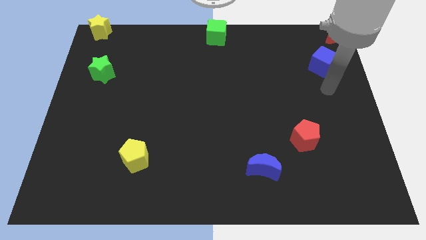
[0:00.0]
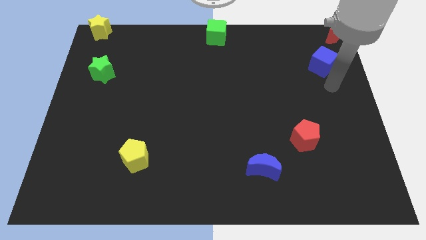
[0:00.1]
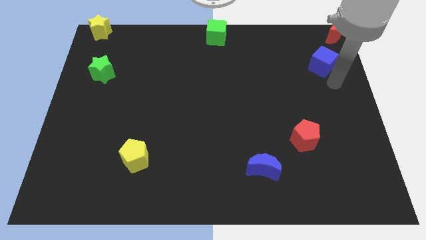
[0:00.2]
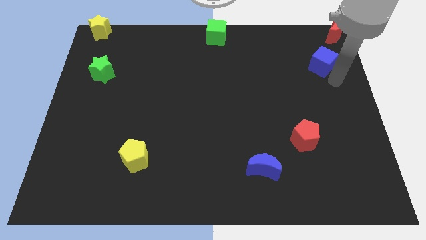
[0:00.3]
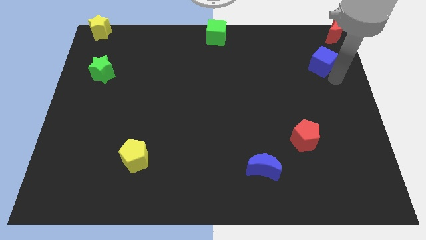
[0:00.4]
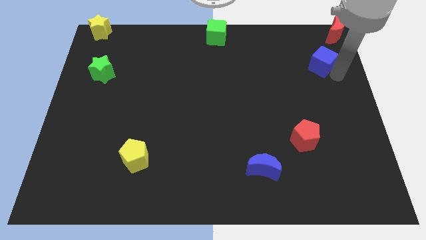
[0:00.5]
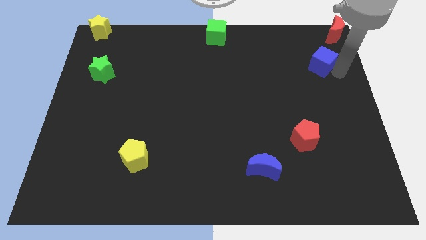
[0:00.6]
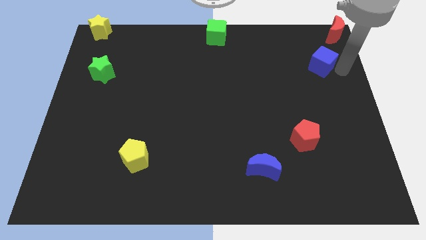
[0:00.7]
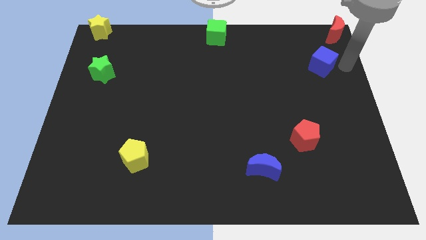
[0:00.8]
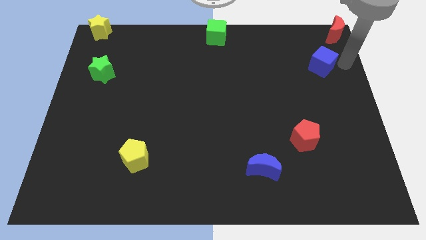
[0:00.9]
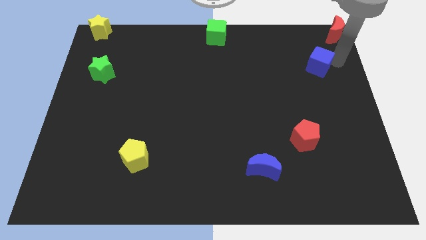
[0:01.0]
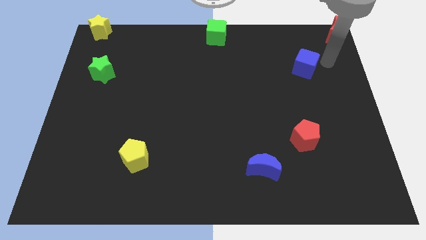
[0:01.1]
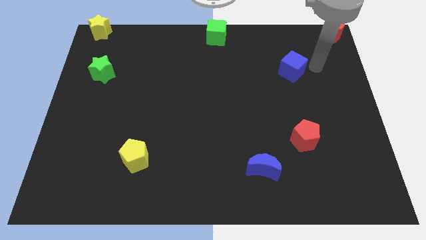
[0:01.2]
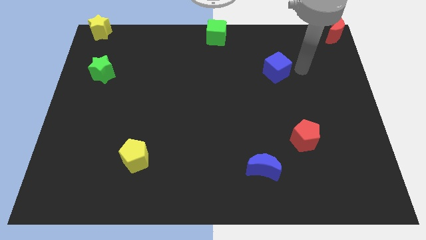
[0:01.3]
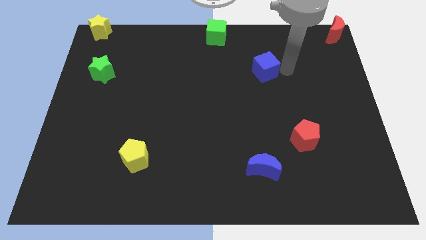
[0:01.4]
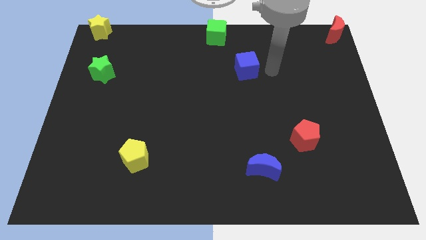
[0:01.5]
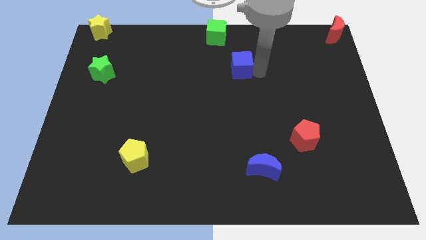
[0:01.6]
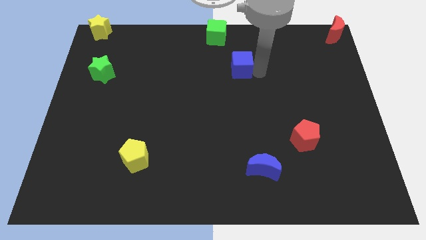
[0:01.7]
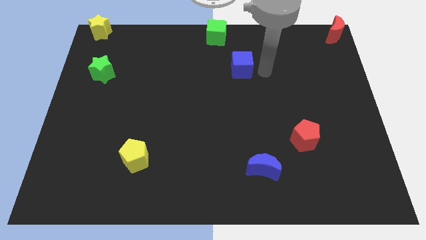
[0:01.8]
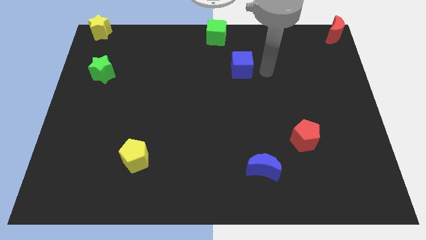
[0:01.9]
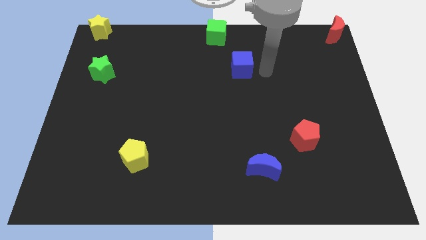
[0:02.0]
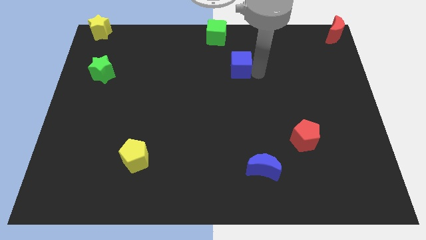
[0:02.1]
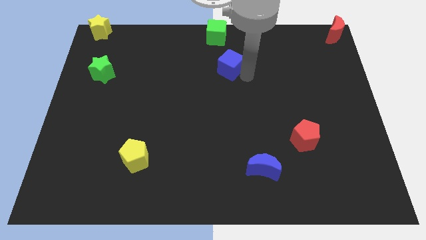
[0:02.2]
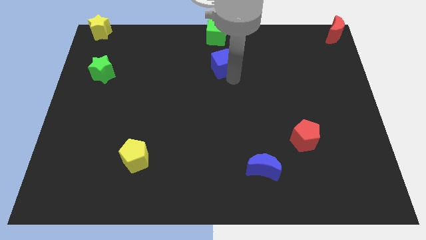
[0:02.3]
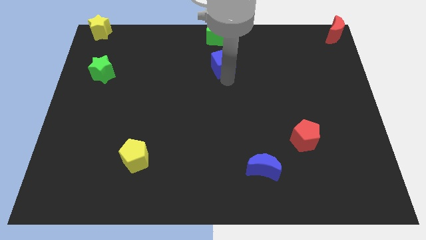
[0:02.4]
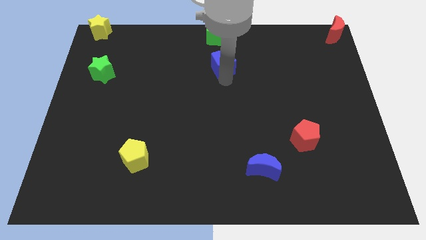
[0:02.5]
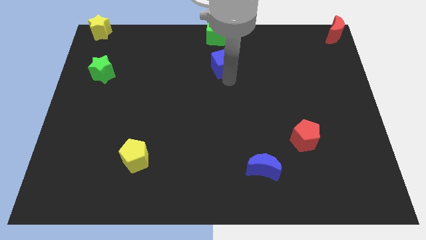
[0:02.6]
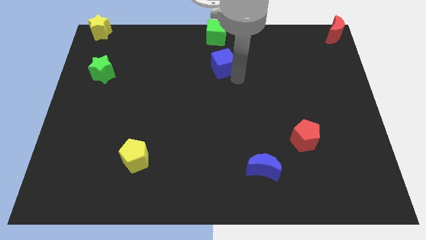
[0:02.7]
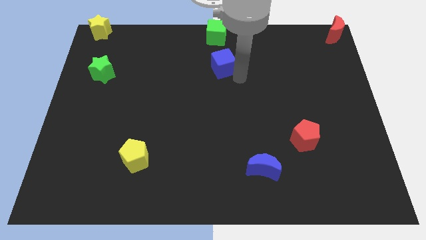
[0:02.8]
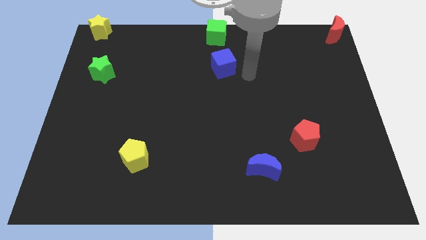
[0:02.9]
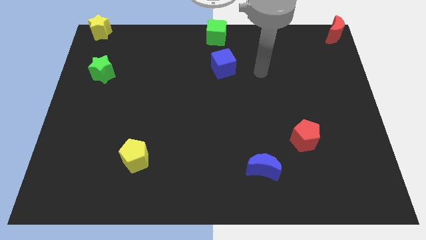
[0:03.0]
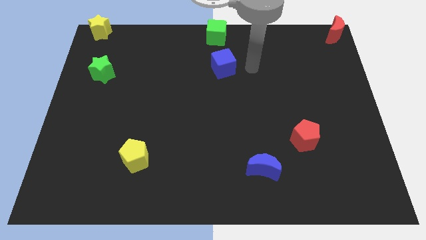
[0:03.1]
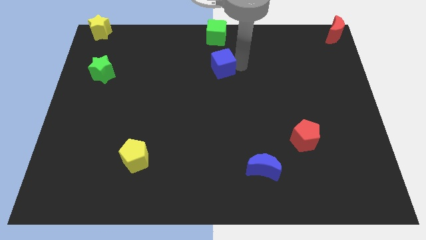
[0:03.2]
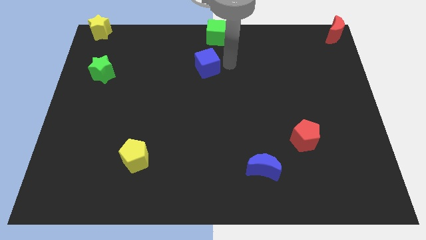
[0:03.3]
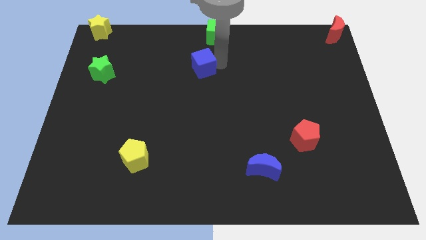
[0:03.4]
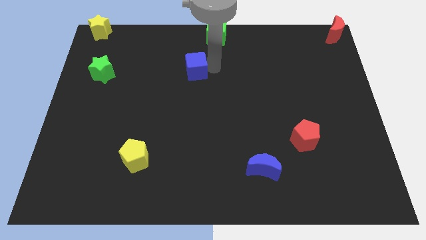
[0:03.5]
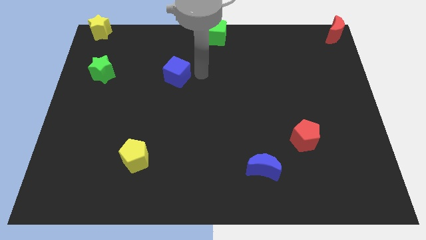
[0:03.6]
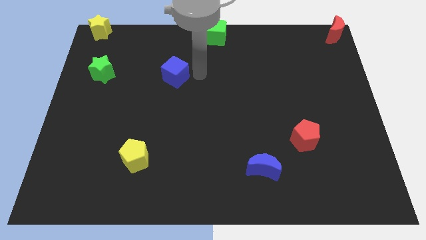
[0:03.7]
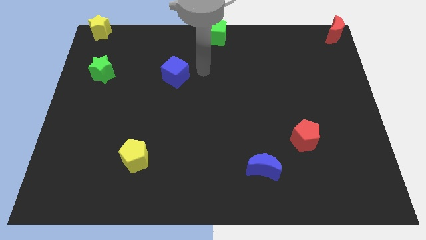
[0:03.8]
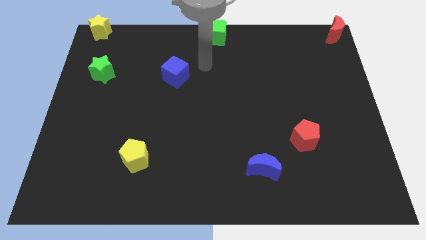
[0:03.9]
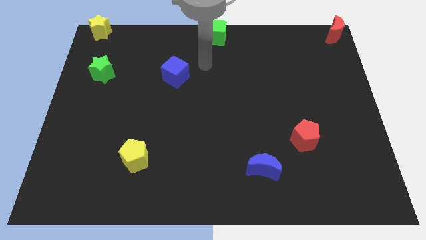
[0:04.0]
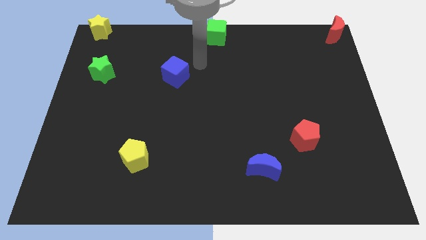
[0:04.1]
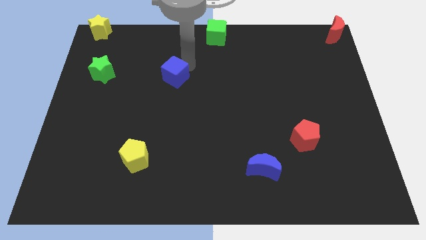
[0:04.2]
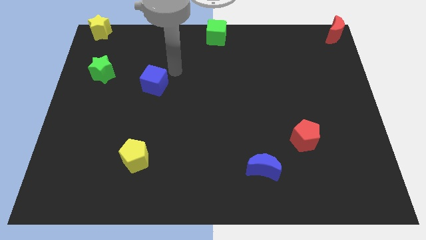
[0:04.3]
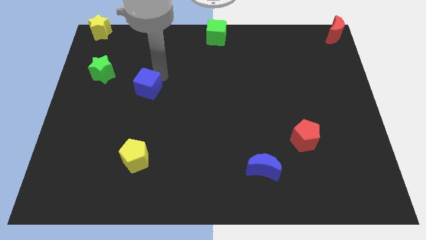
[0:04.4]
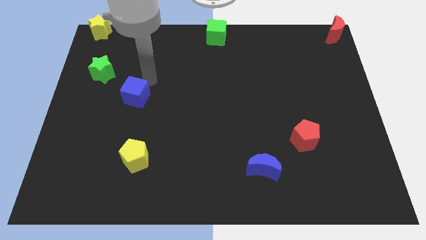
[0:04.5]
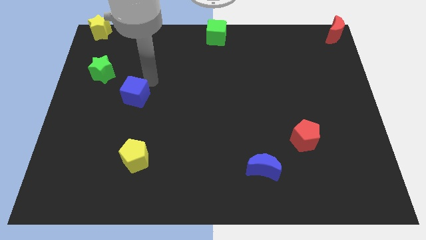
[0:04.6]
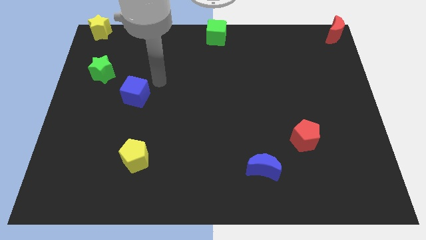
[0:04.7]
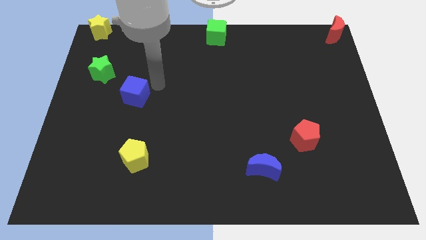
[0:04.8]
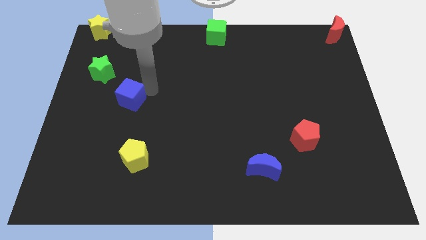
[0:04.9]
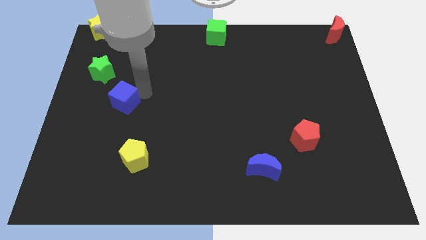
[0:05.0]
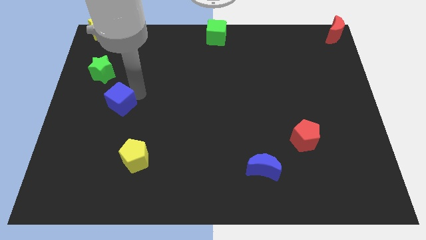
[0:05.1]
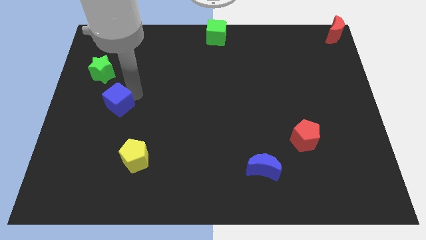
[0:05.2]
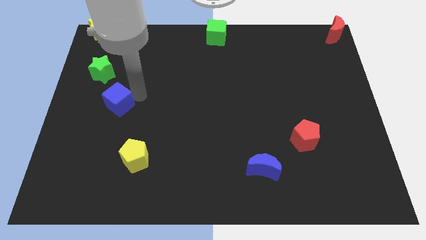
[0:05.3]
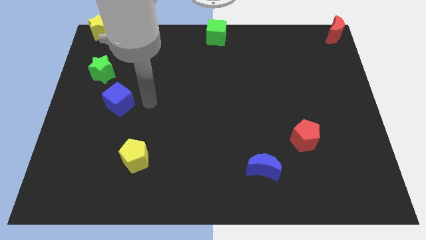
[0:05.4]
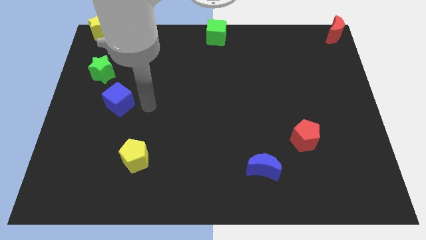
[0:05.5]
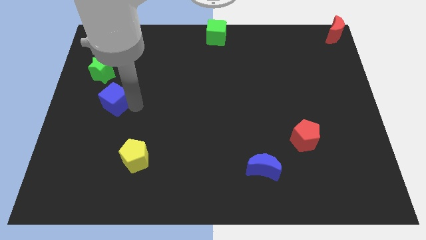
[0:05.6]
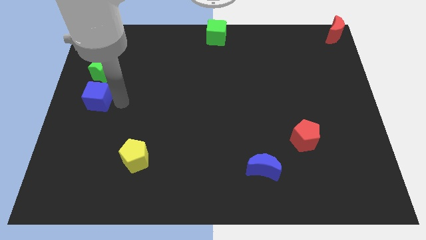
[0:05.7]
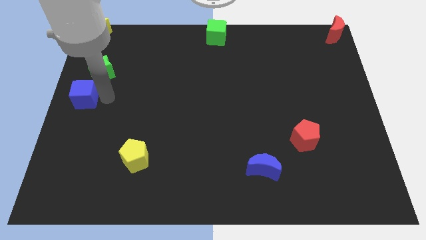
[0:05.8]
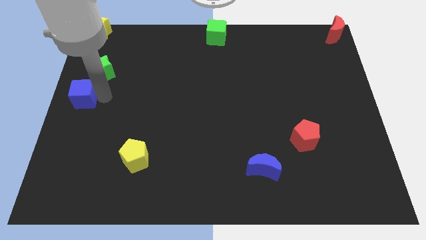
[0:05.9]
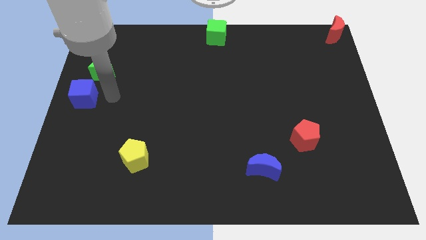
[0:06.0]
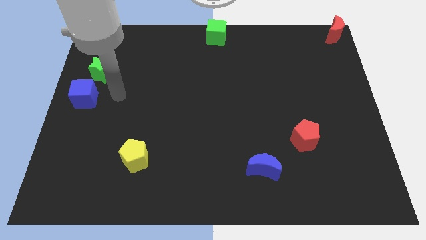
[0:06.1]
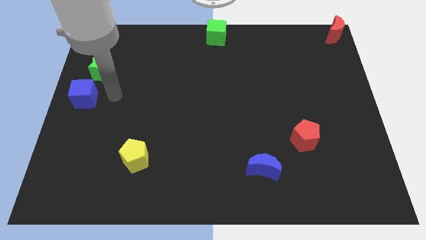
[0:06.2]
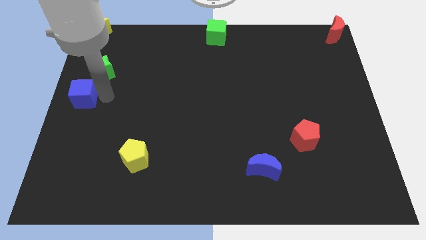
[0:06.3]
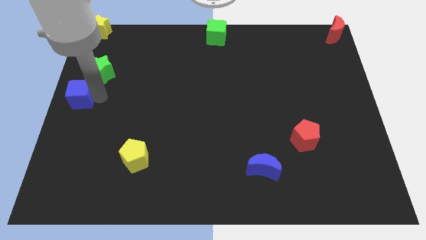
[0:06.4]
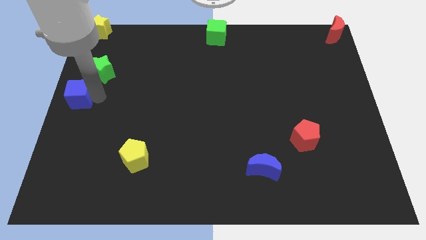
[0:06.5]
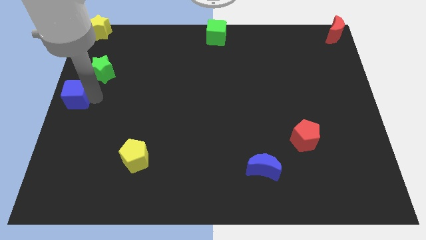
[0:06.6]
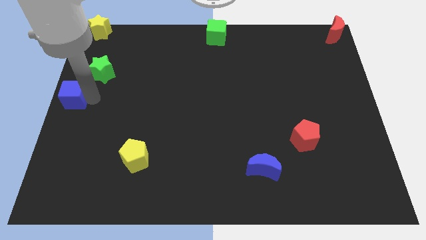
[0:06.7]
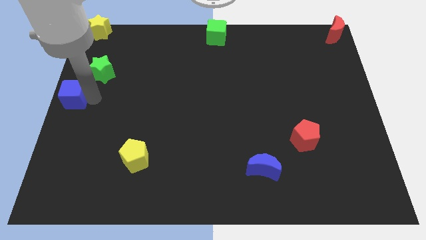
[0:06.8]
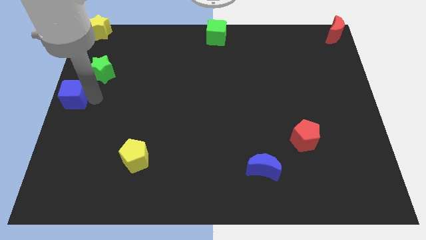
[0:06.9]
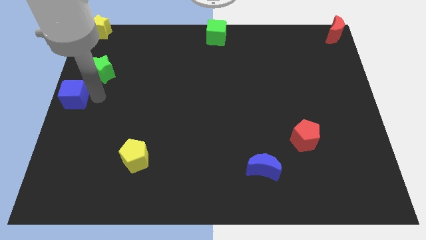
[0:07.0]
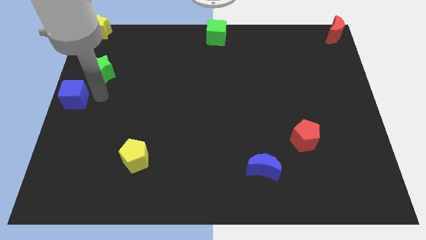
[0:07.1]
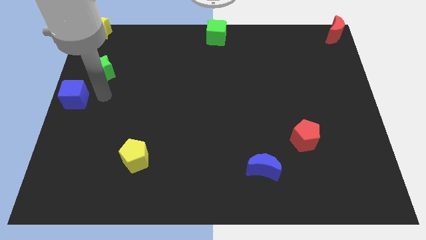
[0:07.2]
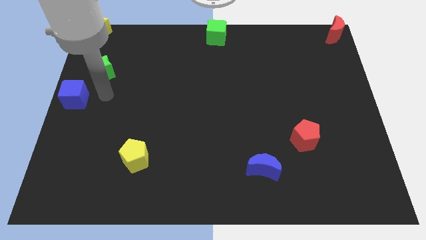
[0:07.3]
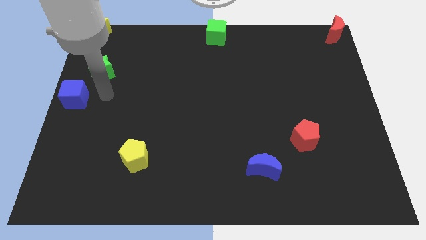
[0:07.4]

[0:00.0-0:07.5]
push the blue cube towards the left center of the board

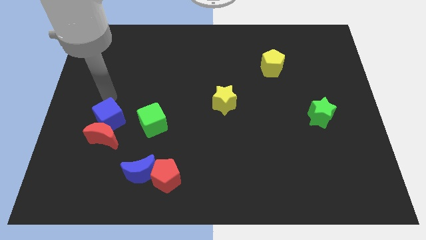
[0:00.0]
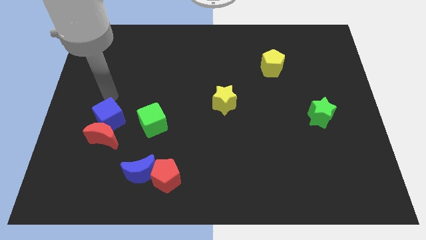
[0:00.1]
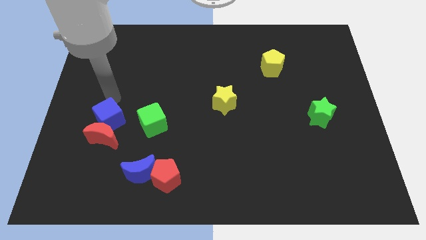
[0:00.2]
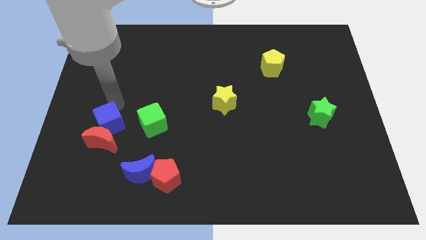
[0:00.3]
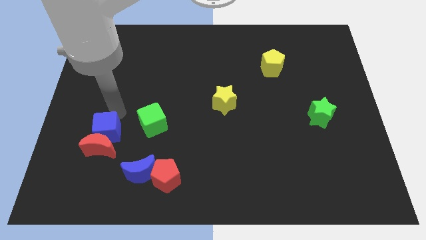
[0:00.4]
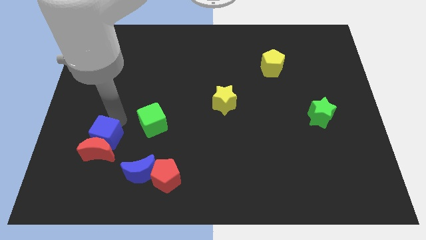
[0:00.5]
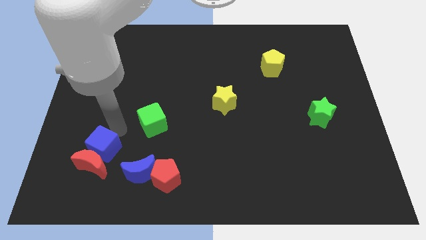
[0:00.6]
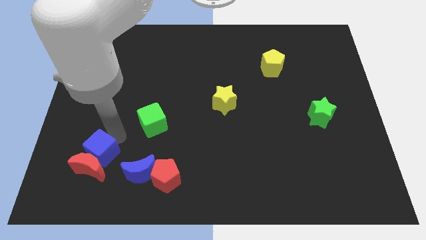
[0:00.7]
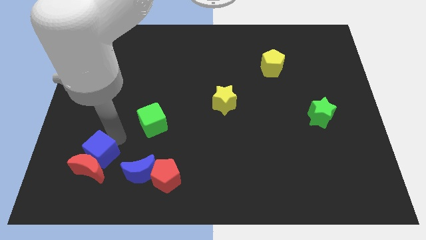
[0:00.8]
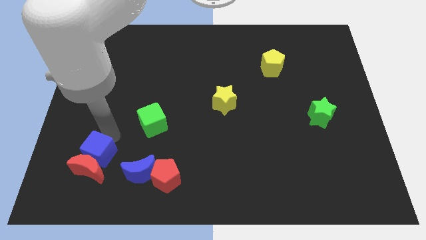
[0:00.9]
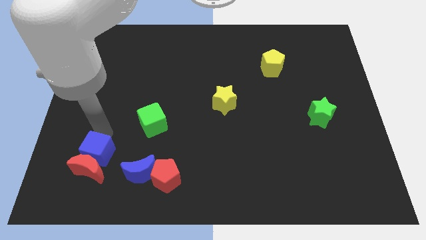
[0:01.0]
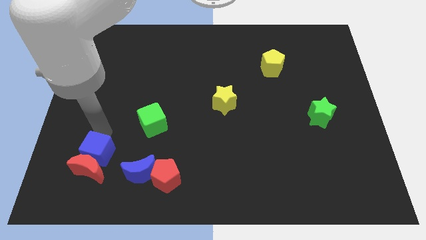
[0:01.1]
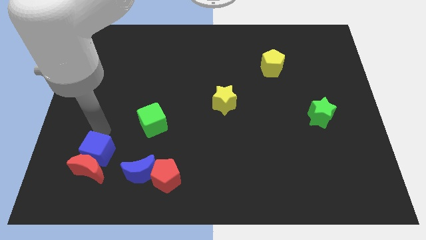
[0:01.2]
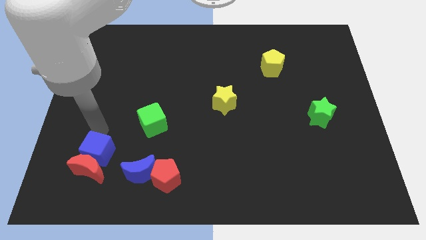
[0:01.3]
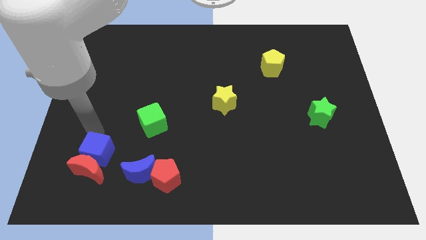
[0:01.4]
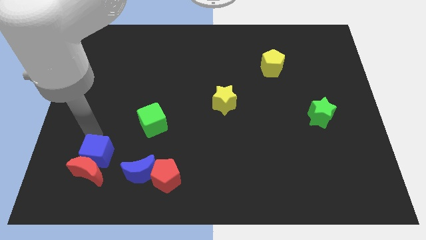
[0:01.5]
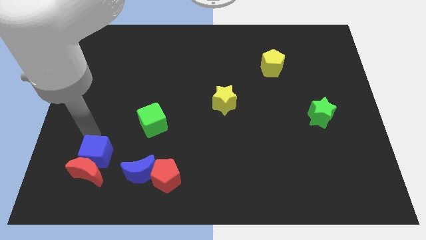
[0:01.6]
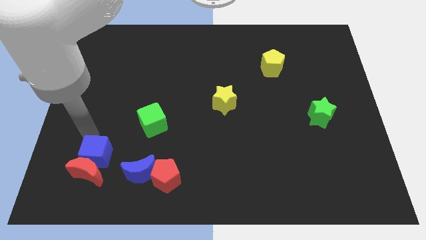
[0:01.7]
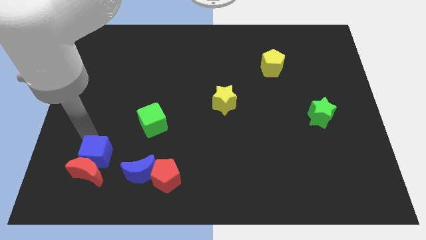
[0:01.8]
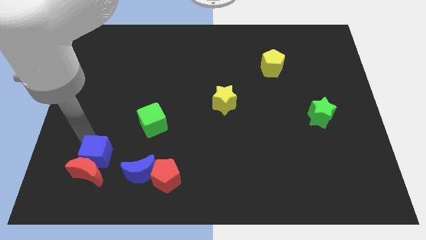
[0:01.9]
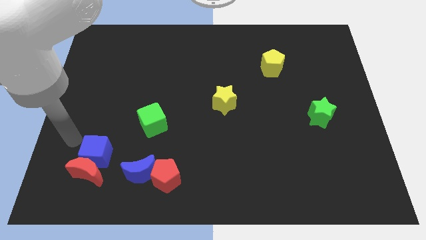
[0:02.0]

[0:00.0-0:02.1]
push the blue cube and red crescent towards bottom
